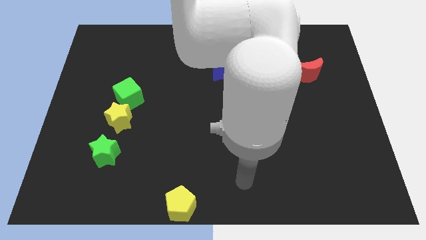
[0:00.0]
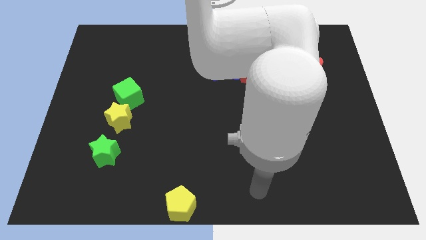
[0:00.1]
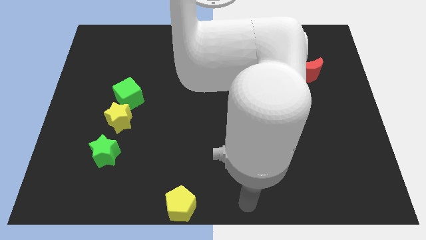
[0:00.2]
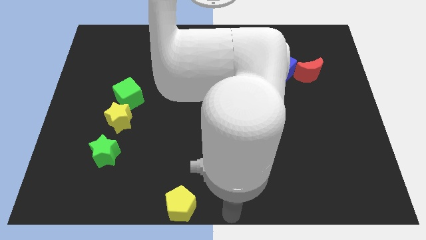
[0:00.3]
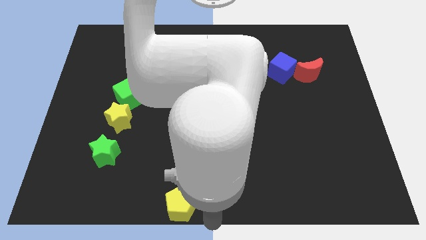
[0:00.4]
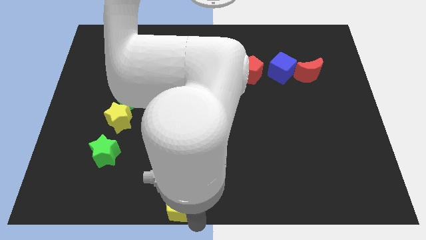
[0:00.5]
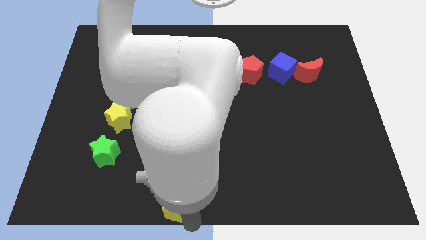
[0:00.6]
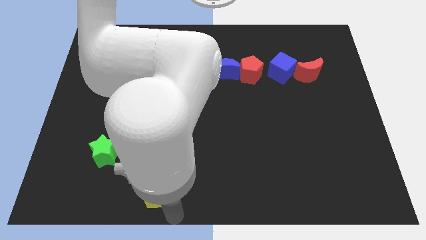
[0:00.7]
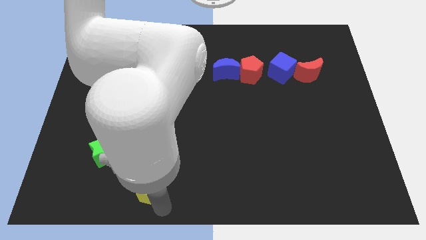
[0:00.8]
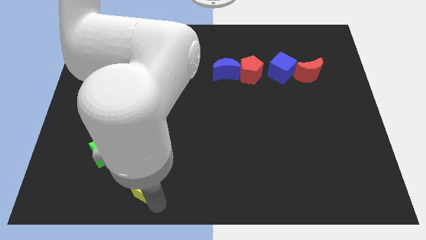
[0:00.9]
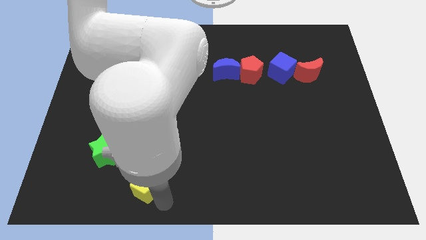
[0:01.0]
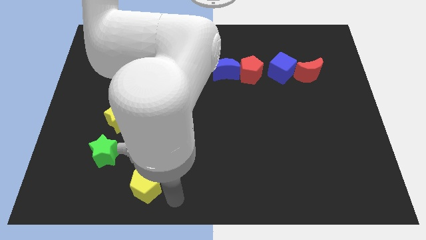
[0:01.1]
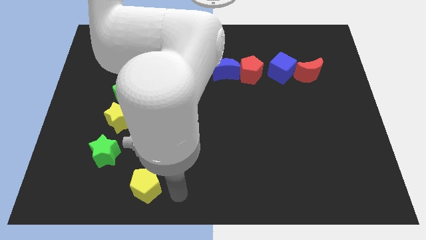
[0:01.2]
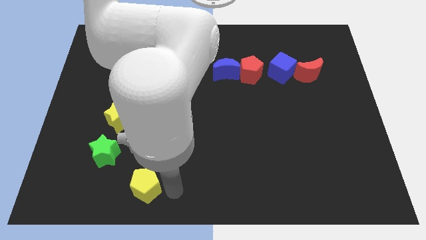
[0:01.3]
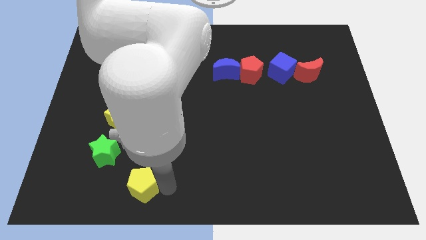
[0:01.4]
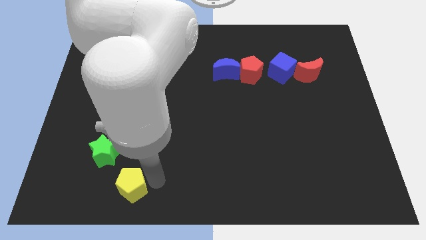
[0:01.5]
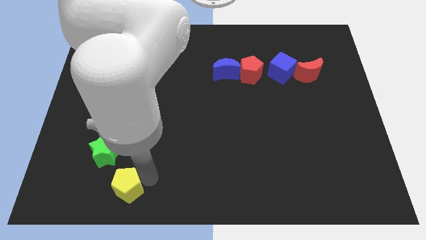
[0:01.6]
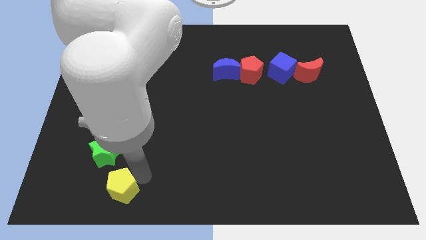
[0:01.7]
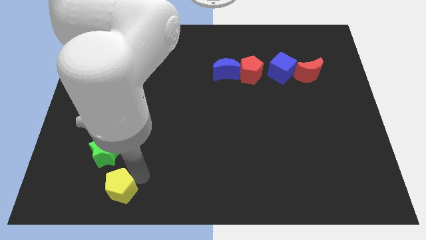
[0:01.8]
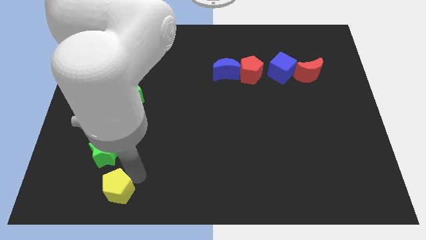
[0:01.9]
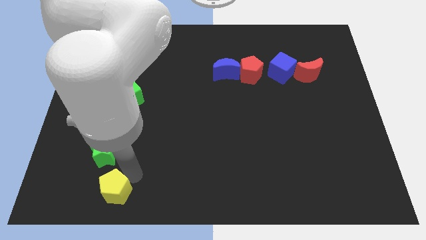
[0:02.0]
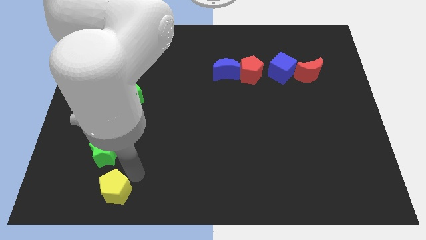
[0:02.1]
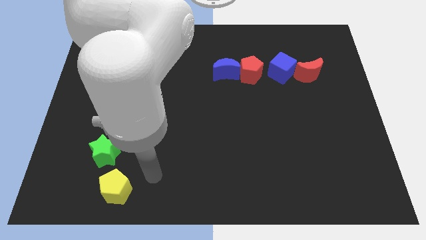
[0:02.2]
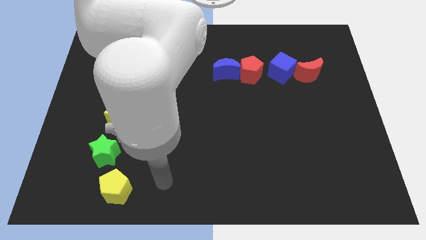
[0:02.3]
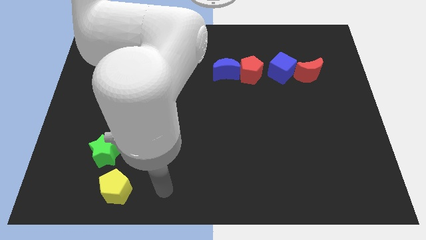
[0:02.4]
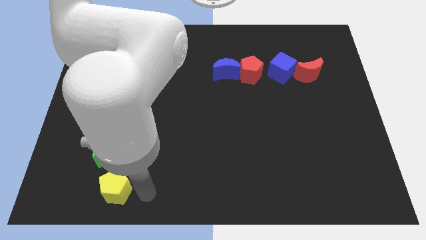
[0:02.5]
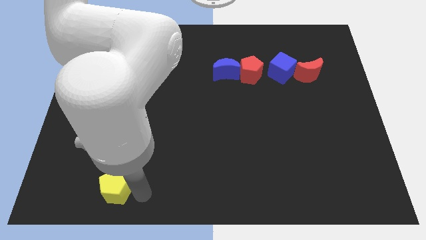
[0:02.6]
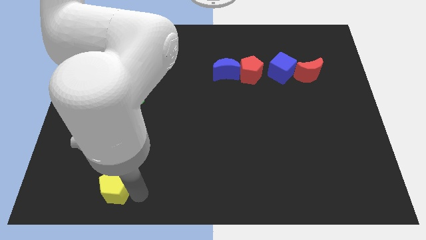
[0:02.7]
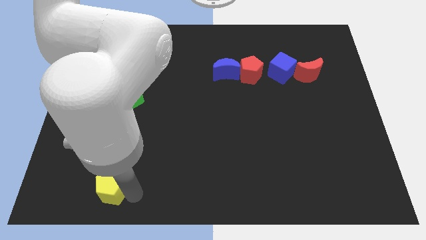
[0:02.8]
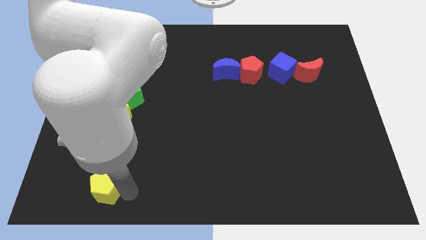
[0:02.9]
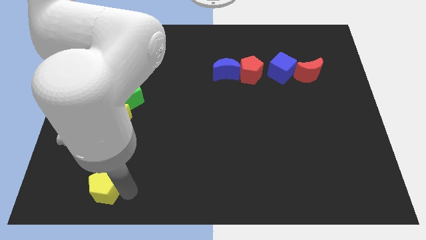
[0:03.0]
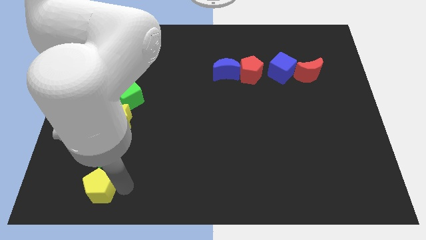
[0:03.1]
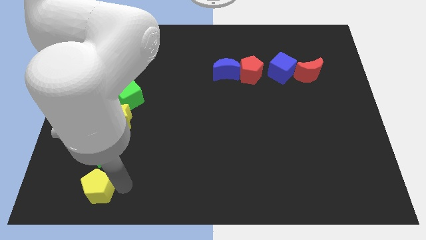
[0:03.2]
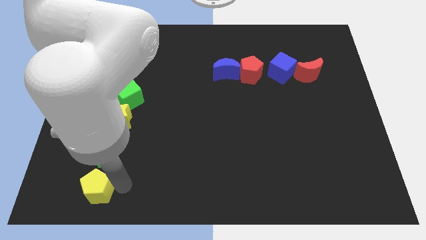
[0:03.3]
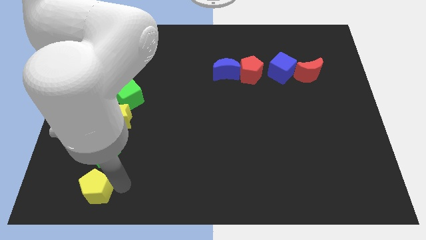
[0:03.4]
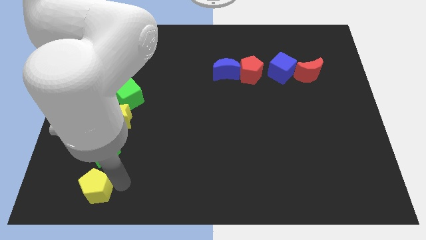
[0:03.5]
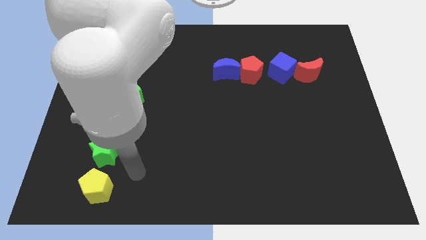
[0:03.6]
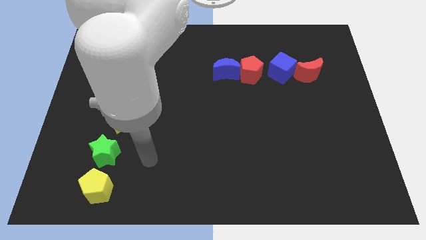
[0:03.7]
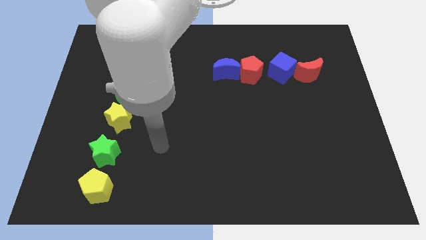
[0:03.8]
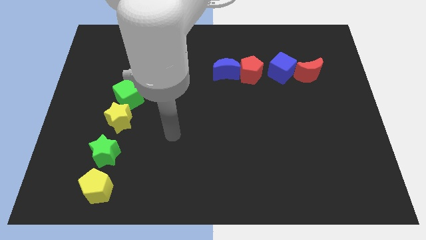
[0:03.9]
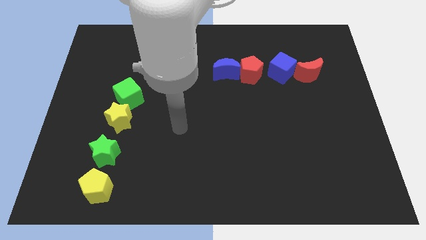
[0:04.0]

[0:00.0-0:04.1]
put the yellow pentagon vertically at the bottom of the green star

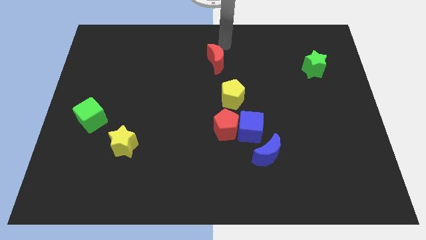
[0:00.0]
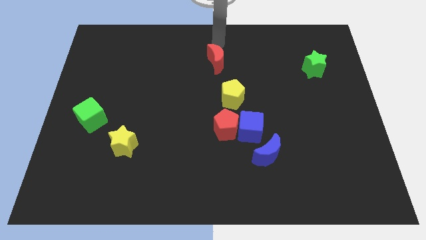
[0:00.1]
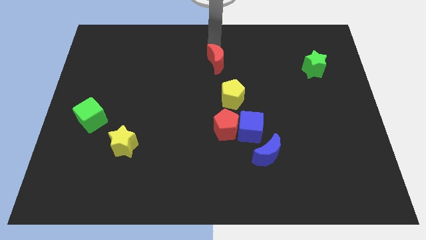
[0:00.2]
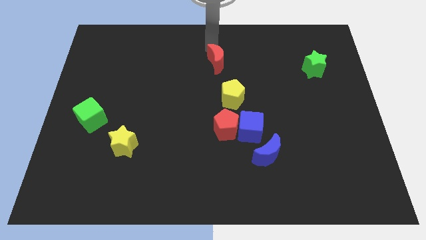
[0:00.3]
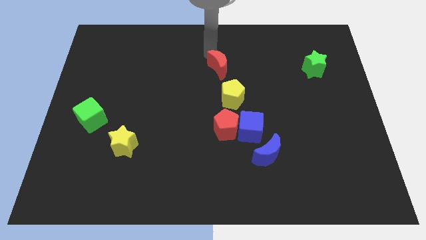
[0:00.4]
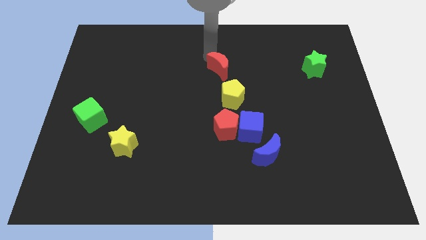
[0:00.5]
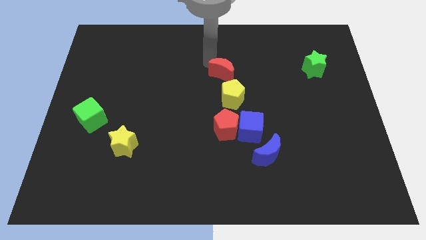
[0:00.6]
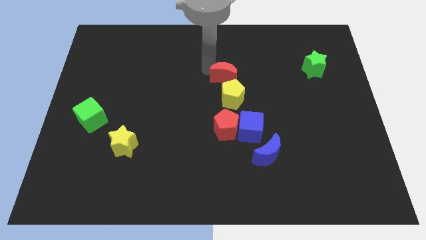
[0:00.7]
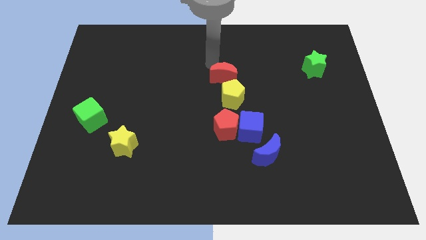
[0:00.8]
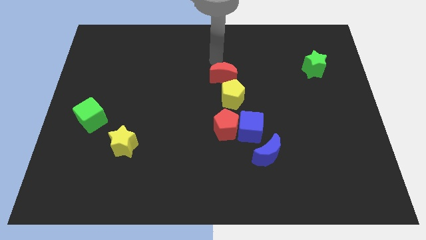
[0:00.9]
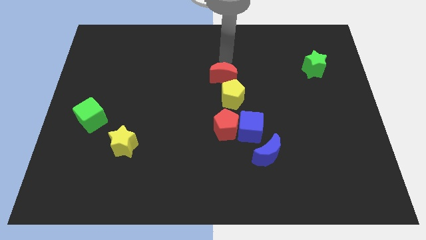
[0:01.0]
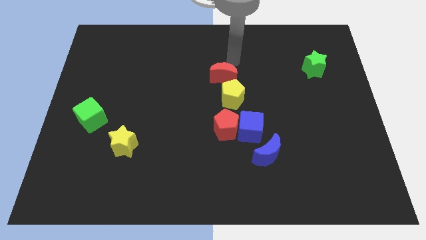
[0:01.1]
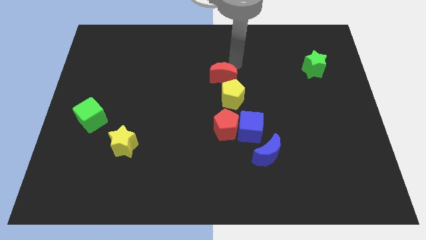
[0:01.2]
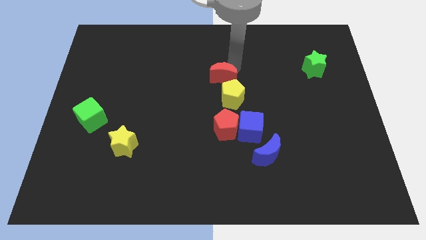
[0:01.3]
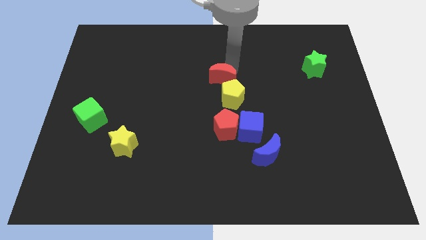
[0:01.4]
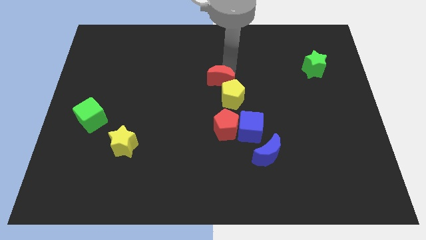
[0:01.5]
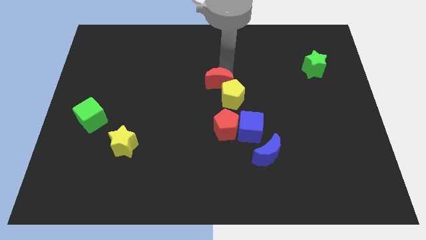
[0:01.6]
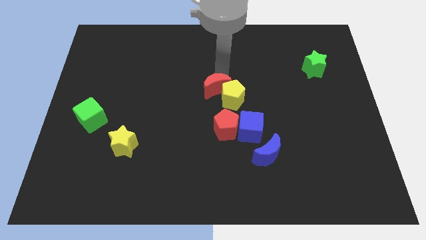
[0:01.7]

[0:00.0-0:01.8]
move the red crescent above the yellow pentagon

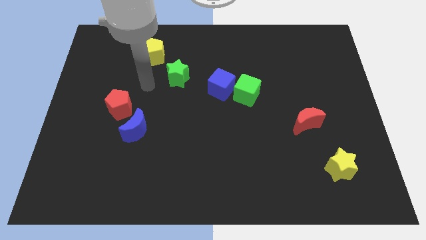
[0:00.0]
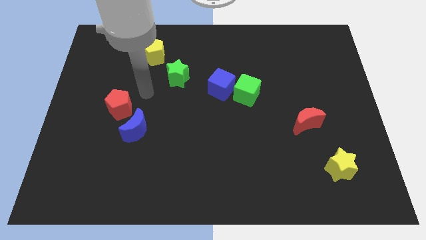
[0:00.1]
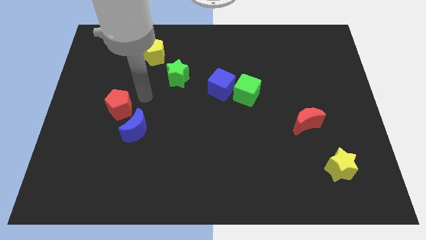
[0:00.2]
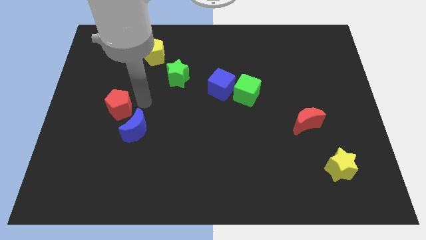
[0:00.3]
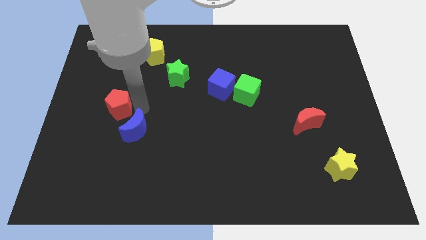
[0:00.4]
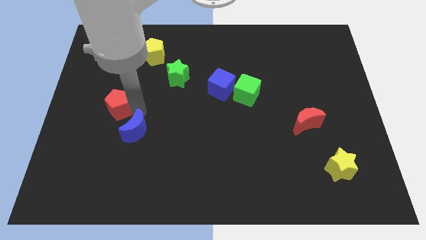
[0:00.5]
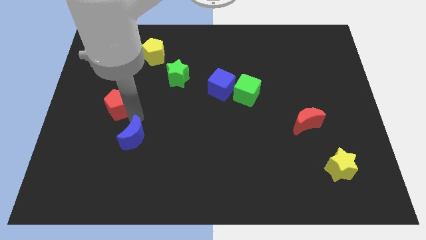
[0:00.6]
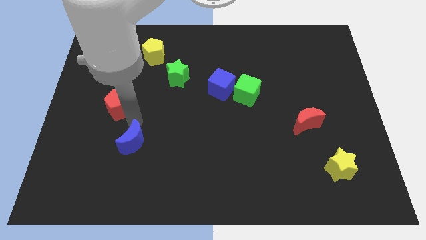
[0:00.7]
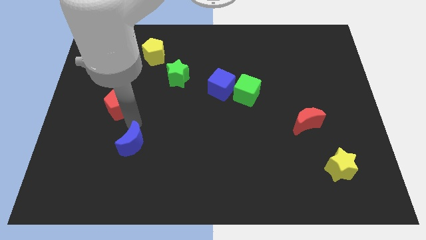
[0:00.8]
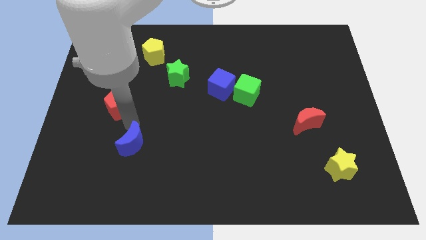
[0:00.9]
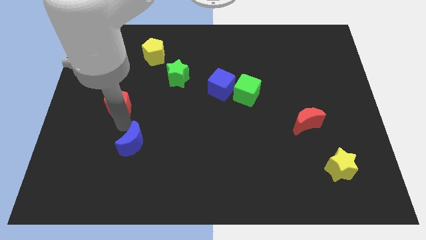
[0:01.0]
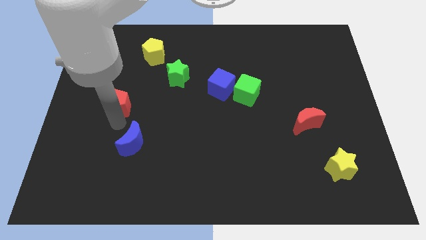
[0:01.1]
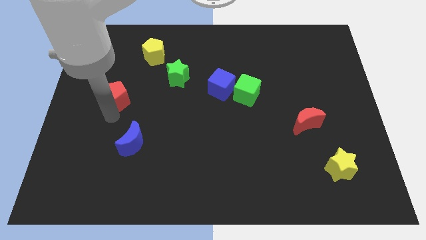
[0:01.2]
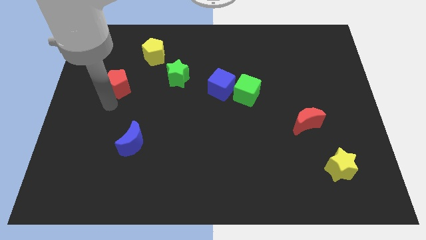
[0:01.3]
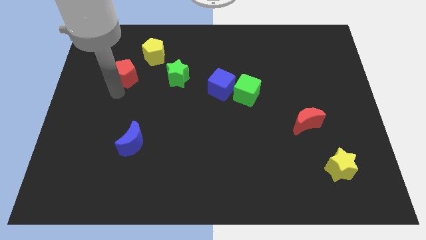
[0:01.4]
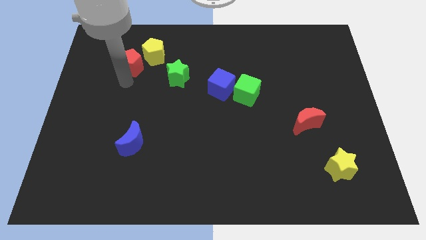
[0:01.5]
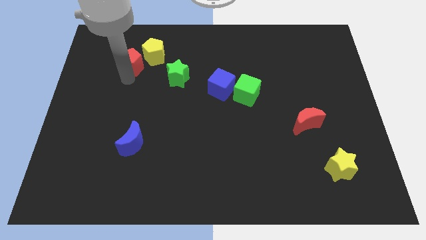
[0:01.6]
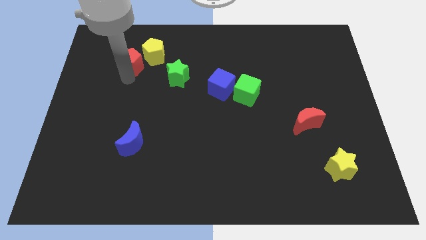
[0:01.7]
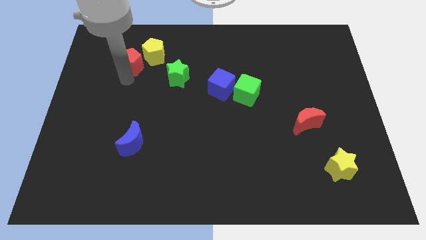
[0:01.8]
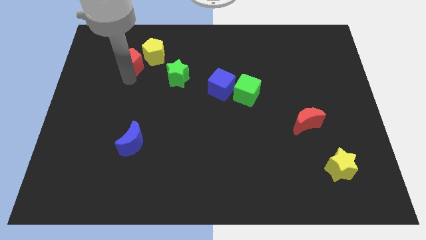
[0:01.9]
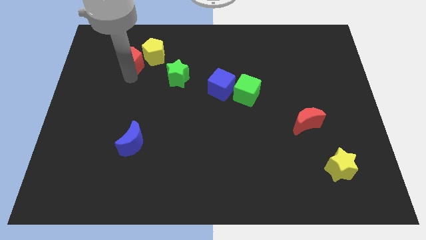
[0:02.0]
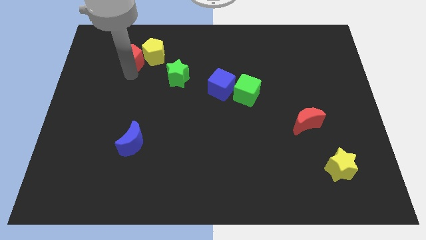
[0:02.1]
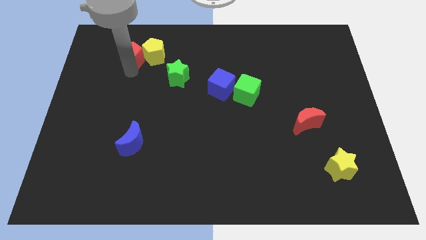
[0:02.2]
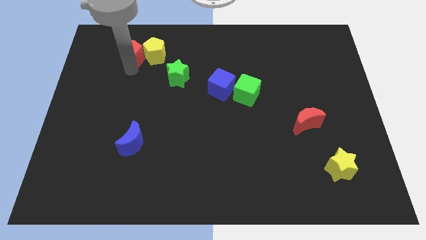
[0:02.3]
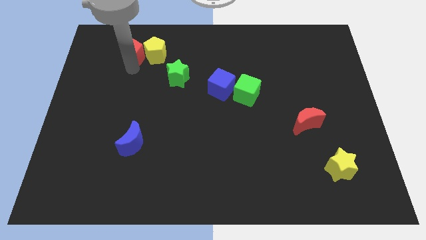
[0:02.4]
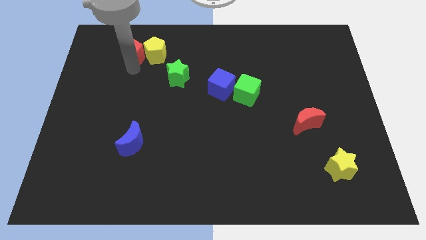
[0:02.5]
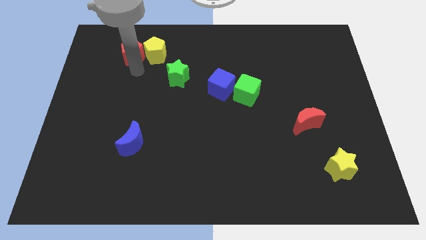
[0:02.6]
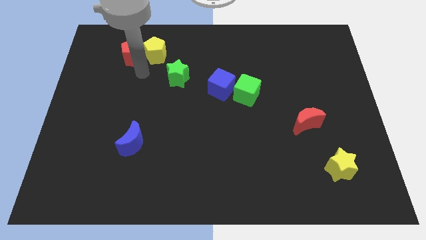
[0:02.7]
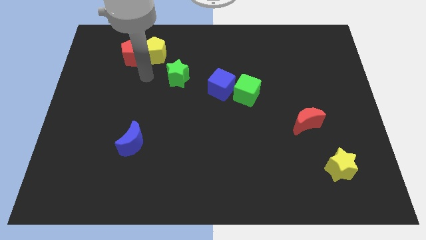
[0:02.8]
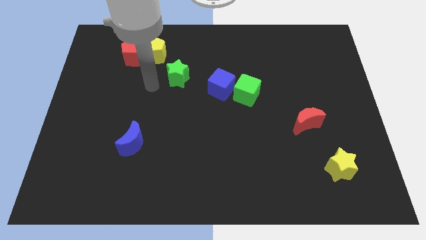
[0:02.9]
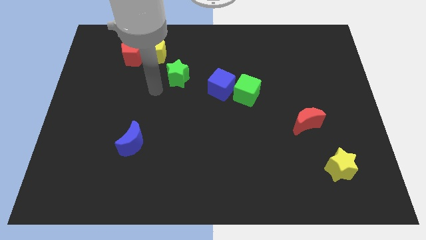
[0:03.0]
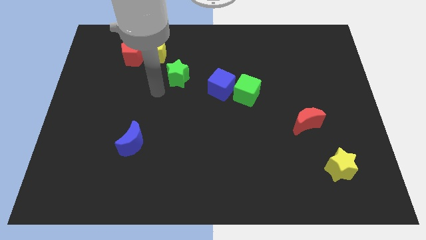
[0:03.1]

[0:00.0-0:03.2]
separate the red pentagon to the left of yellow pentagon
